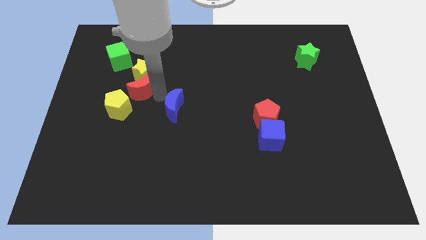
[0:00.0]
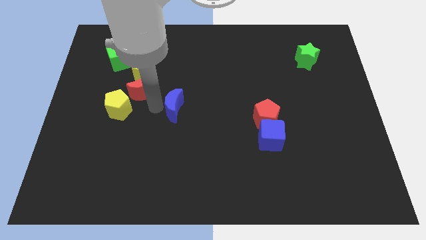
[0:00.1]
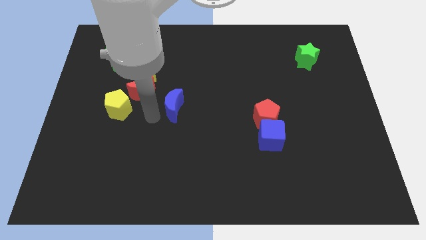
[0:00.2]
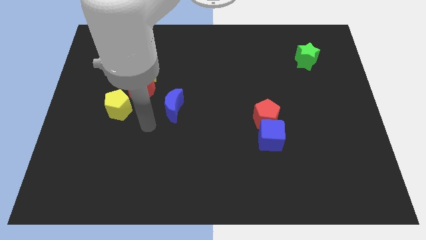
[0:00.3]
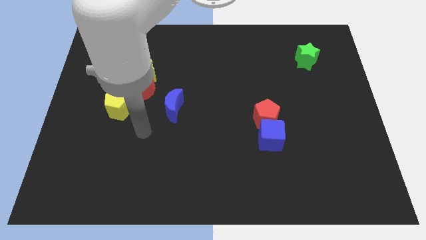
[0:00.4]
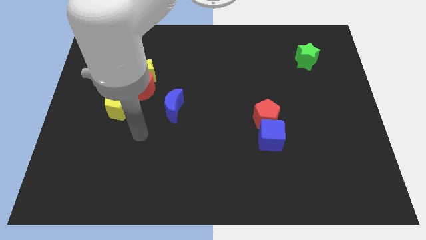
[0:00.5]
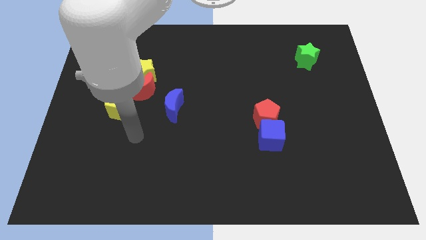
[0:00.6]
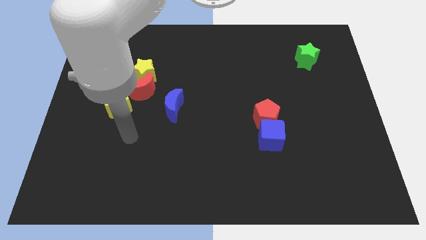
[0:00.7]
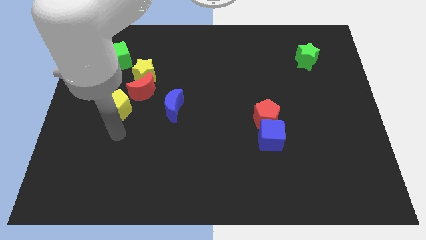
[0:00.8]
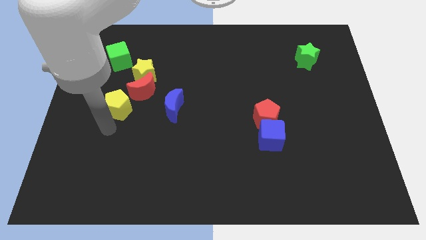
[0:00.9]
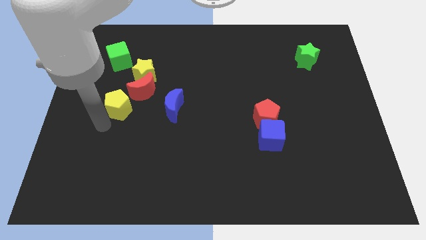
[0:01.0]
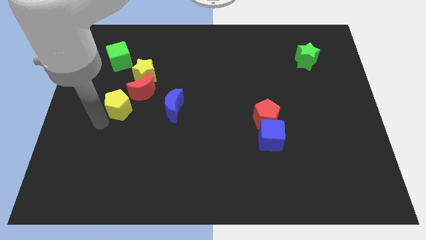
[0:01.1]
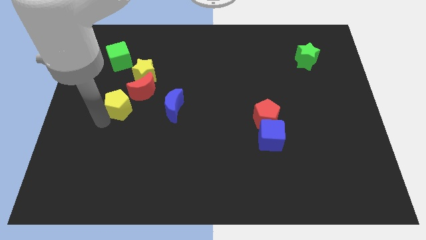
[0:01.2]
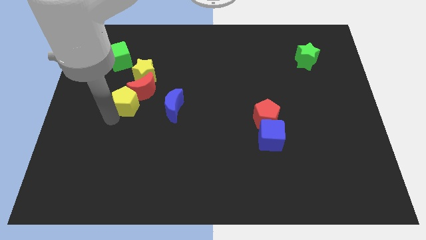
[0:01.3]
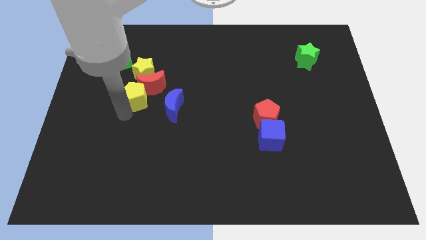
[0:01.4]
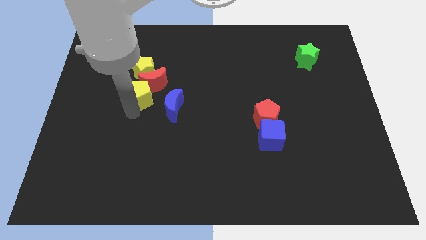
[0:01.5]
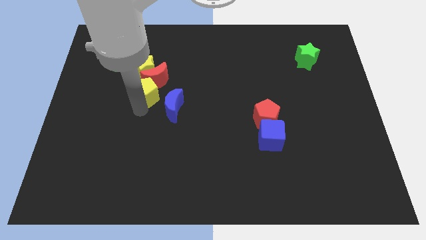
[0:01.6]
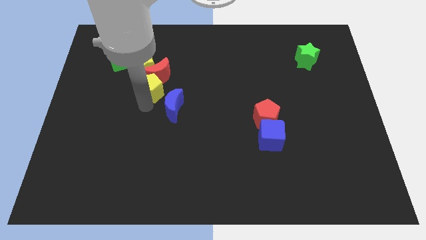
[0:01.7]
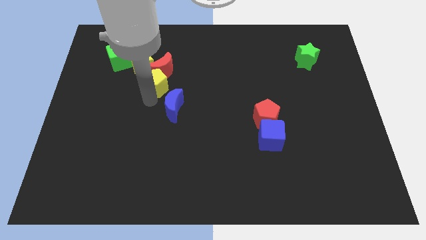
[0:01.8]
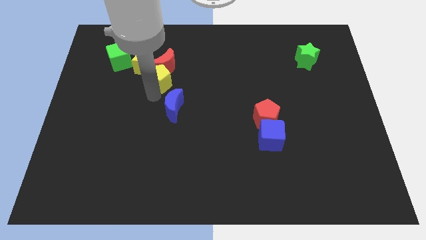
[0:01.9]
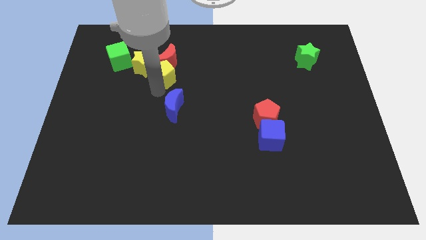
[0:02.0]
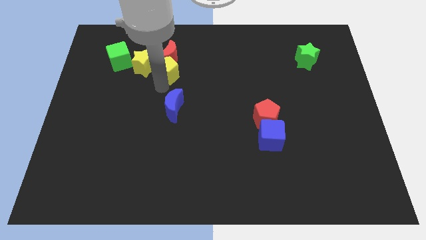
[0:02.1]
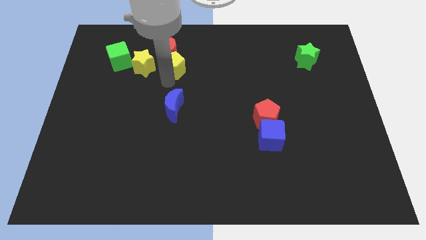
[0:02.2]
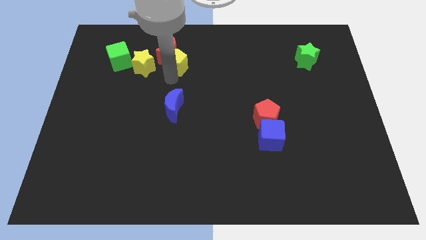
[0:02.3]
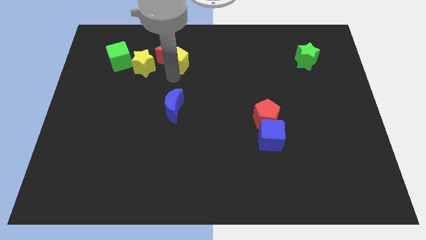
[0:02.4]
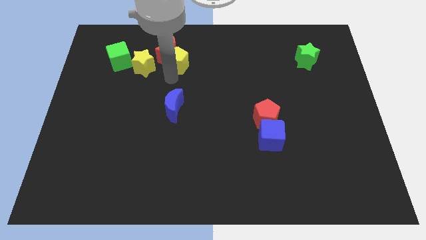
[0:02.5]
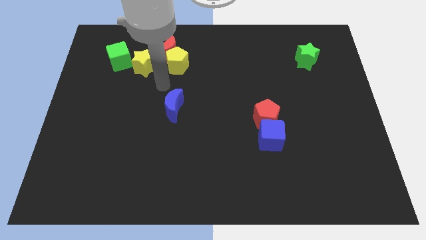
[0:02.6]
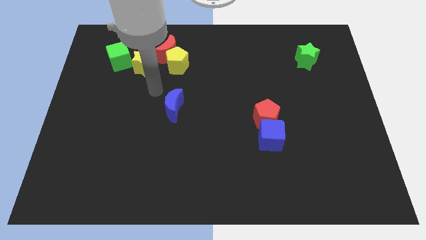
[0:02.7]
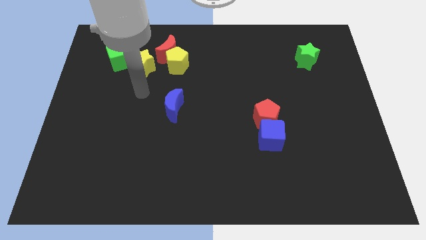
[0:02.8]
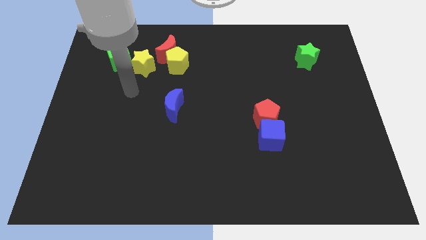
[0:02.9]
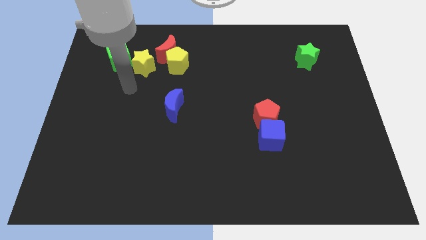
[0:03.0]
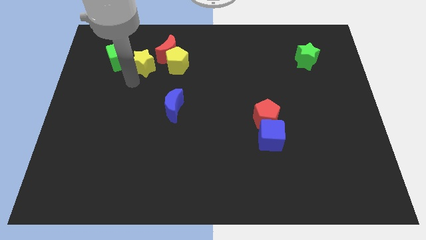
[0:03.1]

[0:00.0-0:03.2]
place the yellow pentagon parallel right to the yellow star

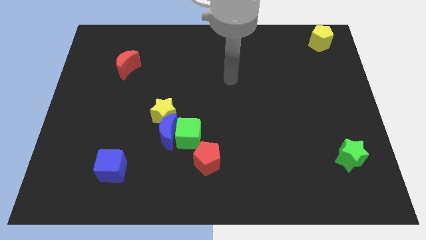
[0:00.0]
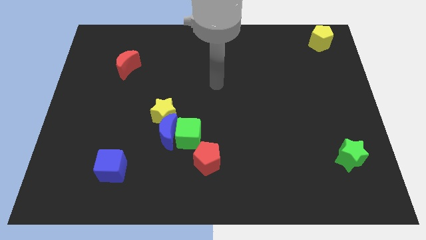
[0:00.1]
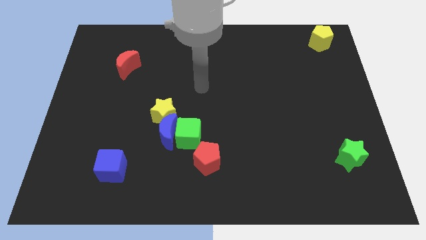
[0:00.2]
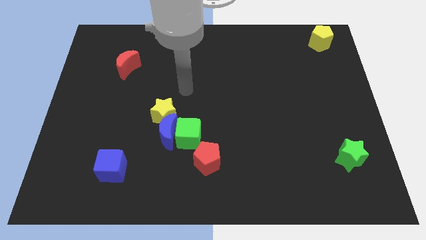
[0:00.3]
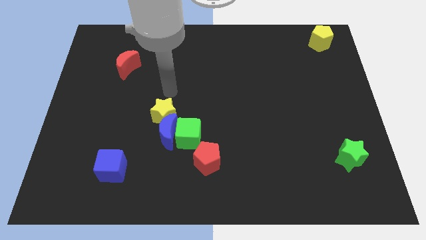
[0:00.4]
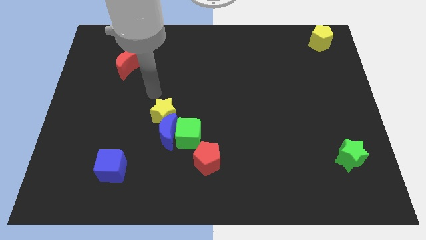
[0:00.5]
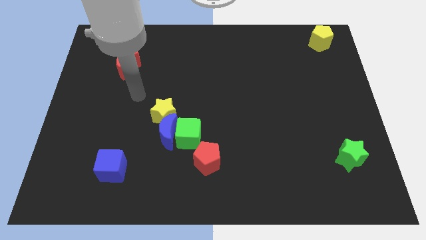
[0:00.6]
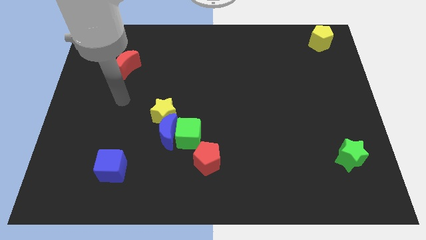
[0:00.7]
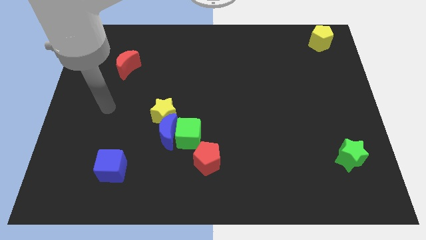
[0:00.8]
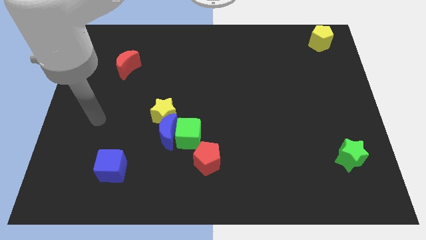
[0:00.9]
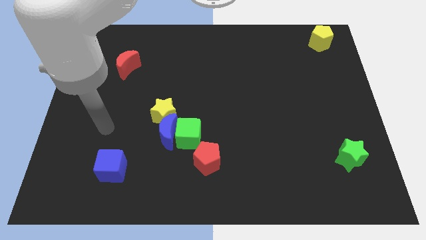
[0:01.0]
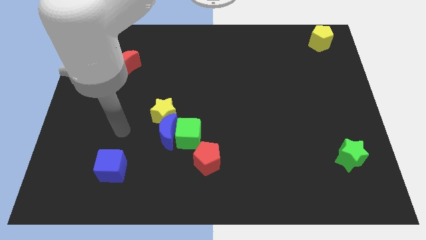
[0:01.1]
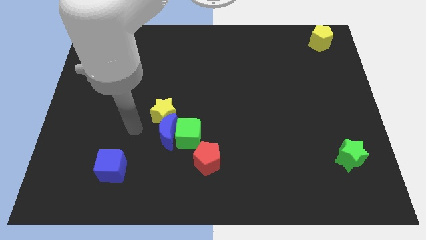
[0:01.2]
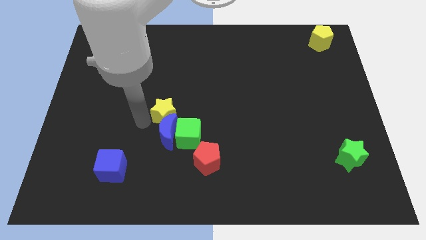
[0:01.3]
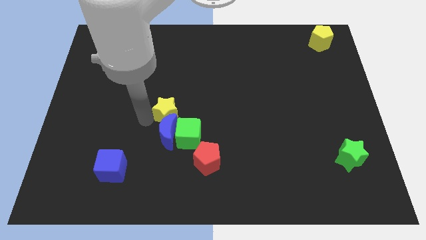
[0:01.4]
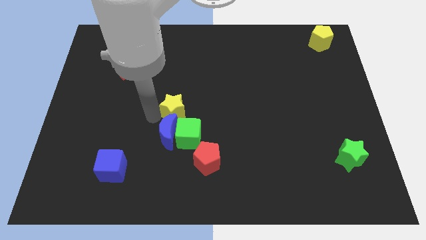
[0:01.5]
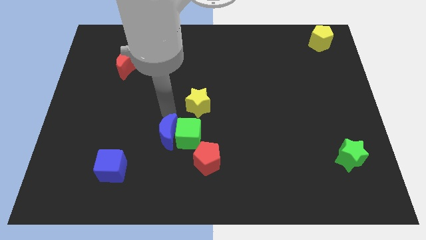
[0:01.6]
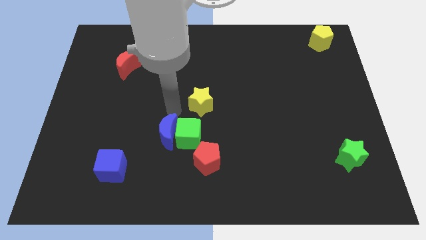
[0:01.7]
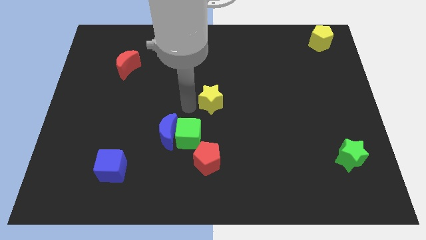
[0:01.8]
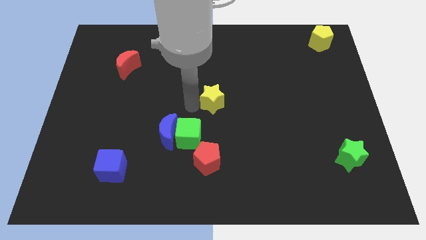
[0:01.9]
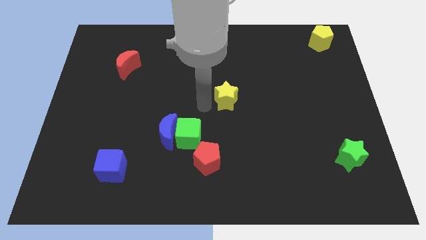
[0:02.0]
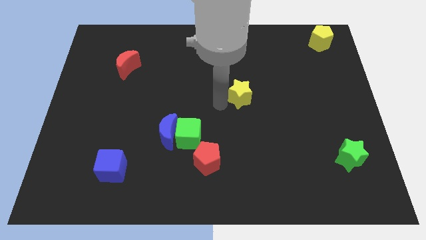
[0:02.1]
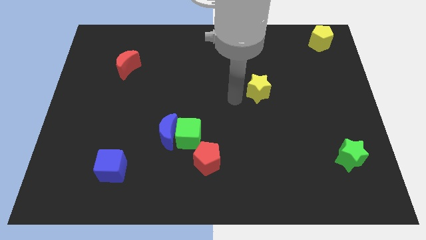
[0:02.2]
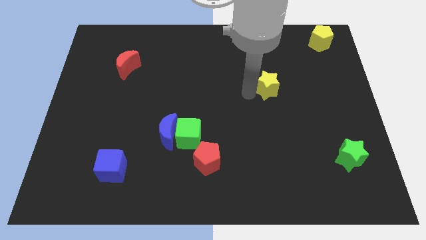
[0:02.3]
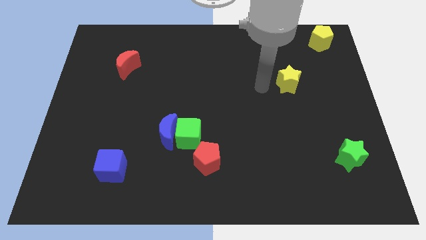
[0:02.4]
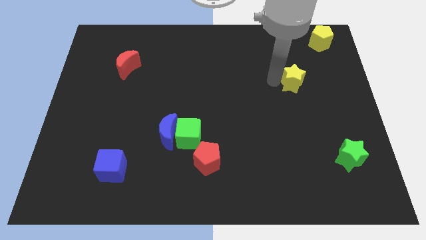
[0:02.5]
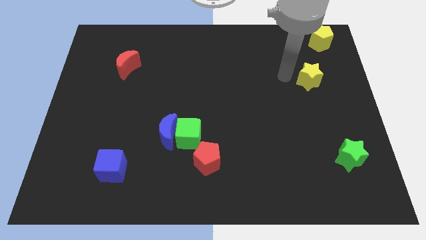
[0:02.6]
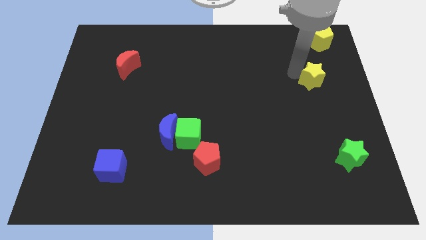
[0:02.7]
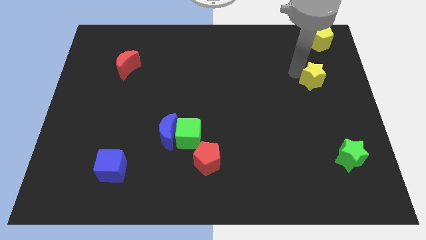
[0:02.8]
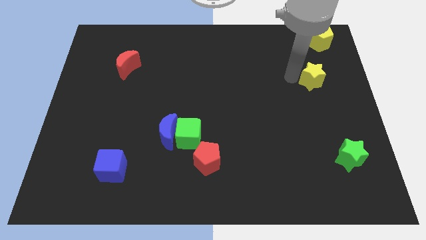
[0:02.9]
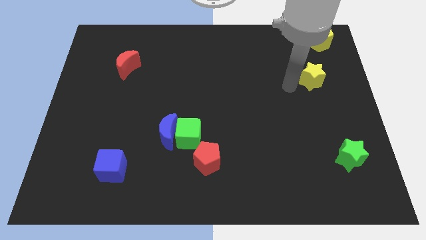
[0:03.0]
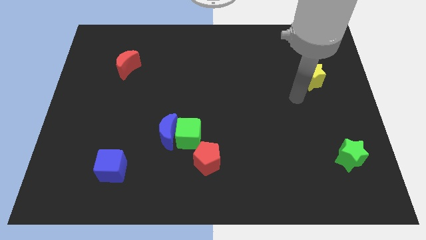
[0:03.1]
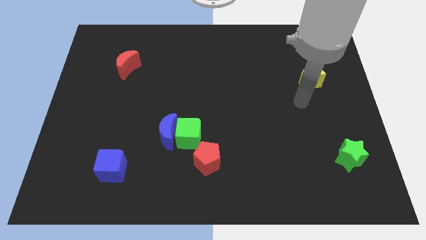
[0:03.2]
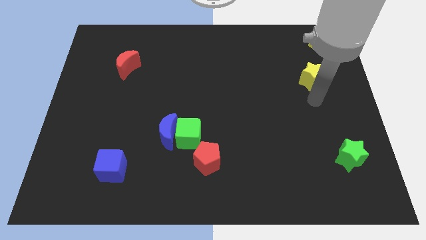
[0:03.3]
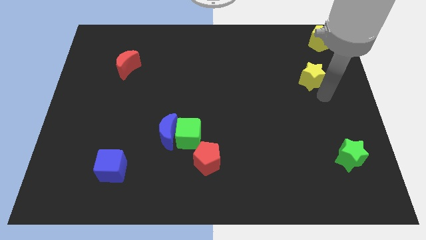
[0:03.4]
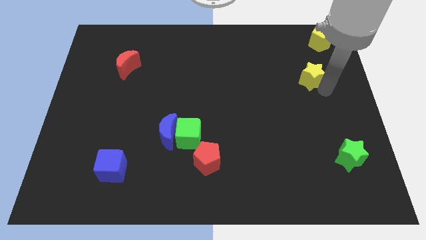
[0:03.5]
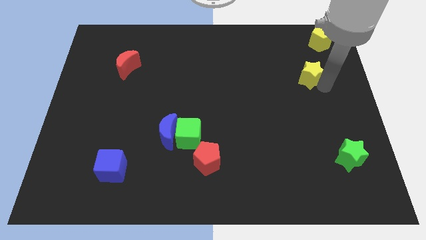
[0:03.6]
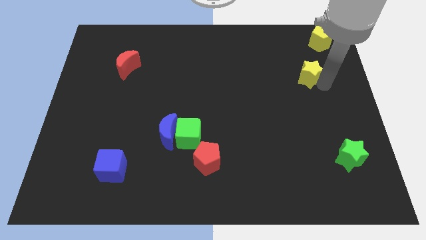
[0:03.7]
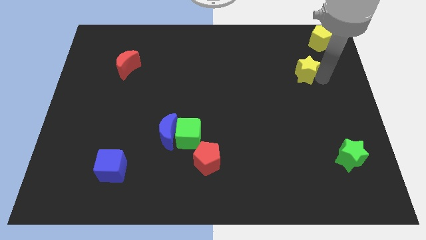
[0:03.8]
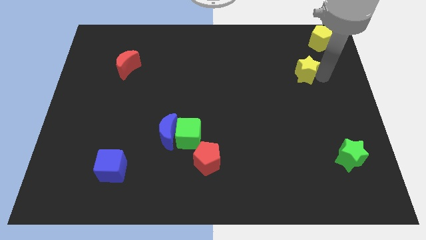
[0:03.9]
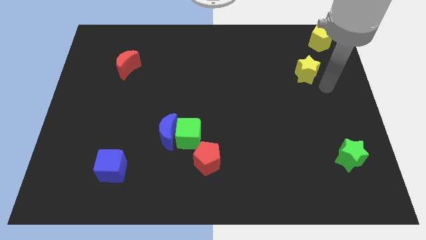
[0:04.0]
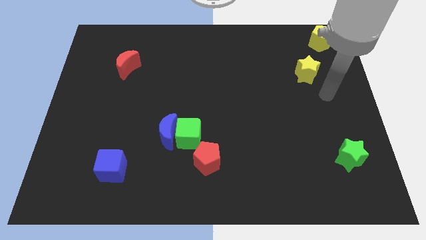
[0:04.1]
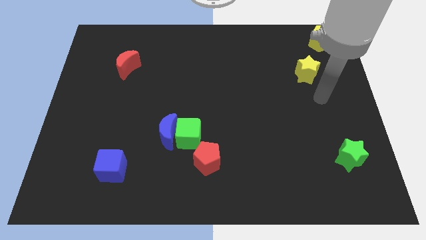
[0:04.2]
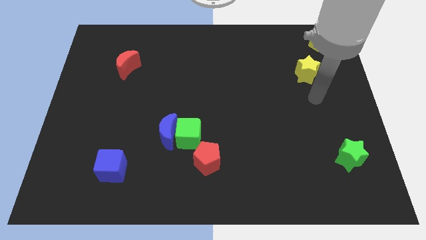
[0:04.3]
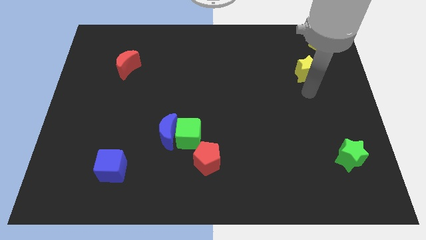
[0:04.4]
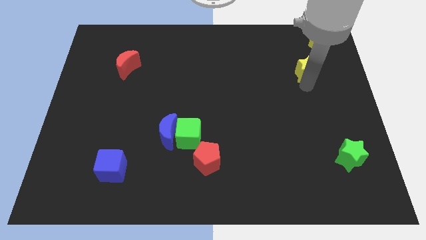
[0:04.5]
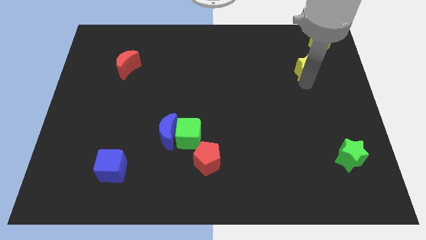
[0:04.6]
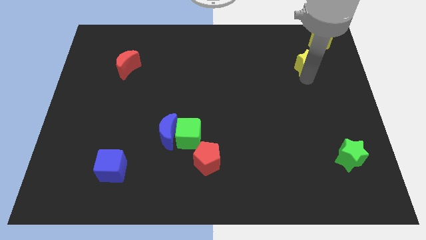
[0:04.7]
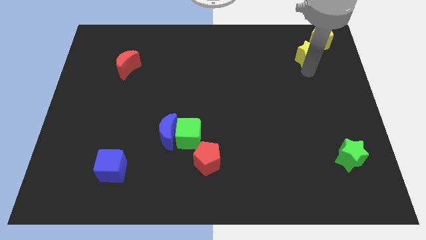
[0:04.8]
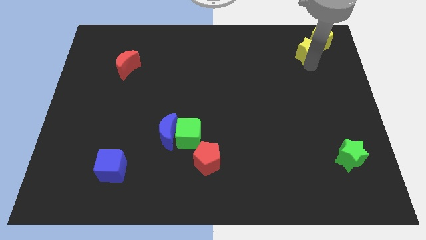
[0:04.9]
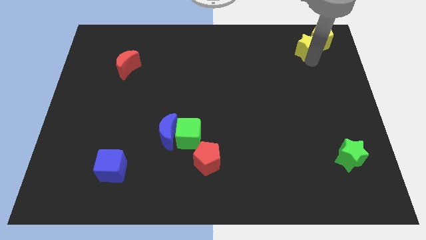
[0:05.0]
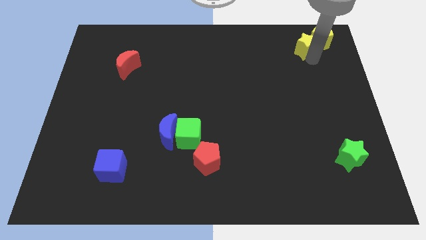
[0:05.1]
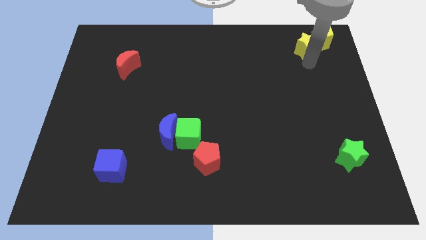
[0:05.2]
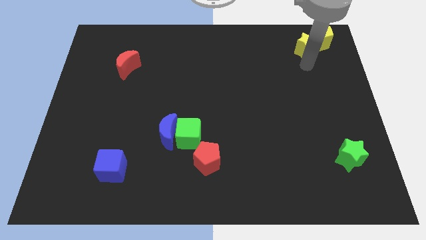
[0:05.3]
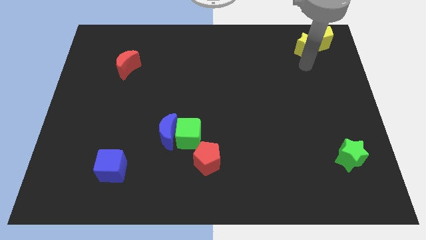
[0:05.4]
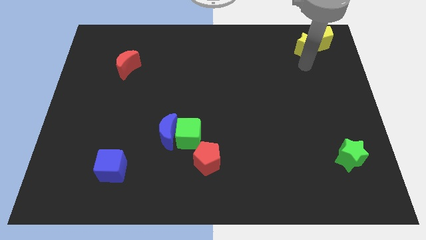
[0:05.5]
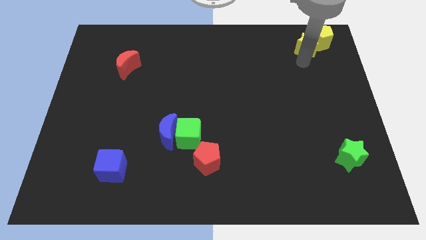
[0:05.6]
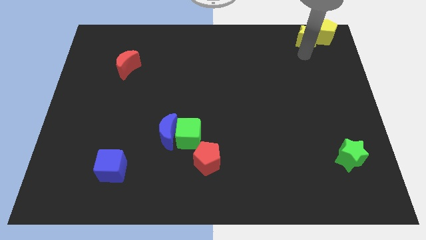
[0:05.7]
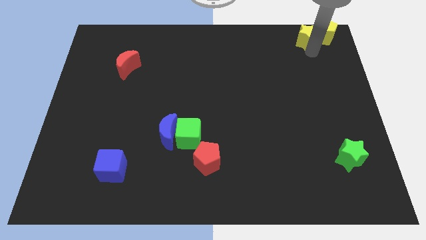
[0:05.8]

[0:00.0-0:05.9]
push the yellow star into the yellow pentagon

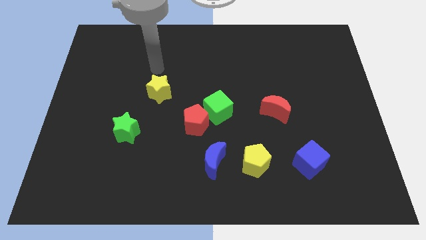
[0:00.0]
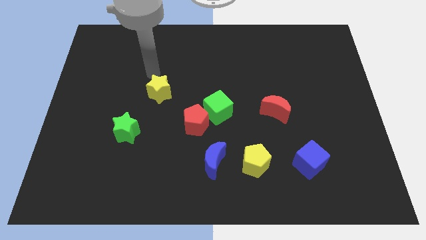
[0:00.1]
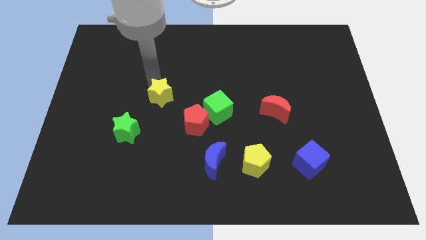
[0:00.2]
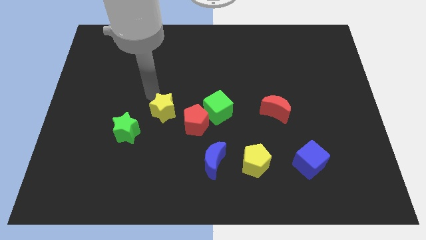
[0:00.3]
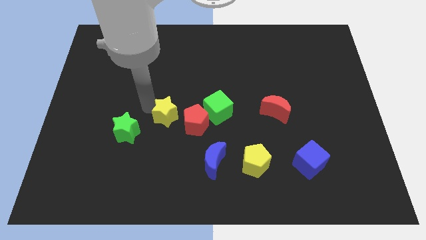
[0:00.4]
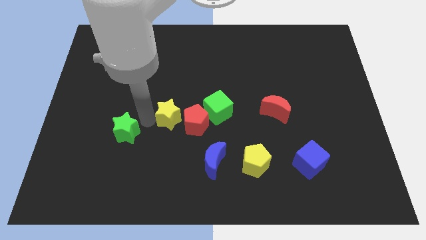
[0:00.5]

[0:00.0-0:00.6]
move the yellow star to the left side of the red pentagon
